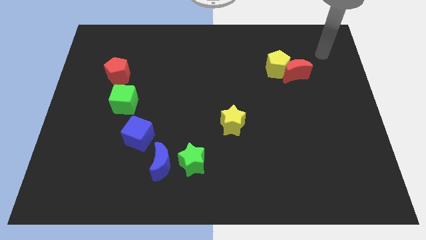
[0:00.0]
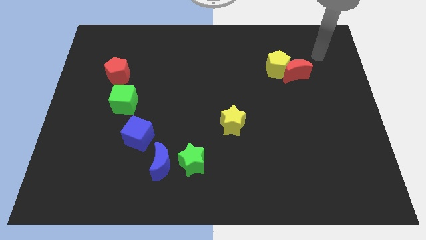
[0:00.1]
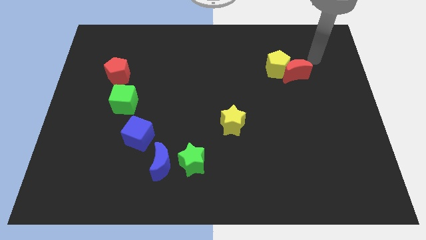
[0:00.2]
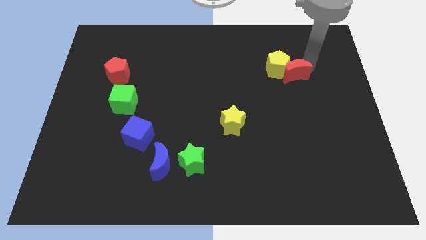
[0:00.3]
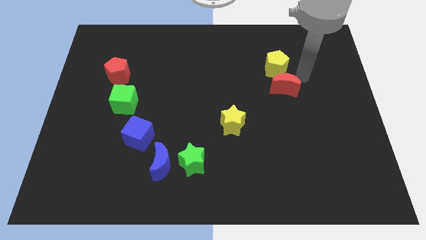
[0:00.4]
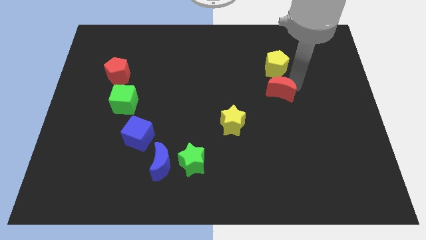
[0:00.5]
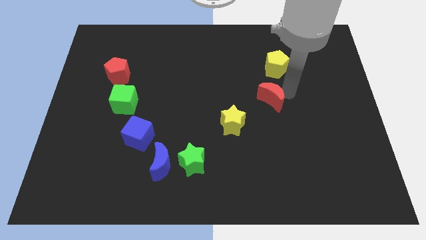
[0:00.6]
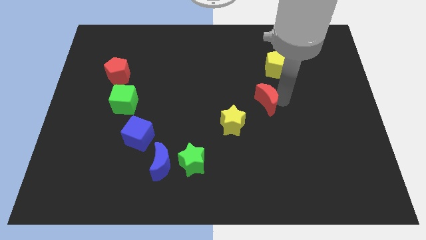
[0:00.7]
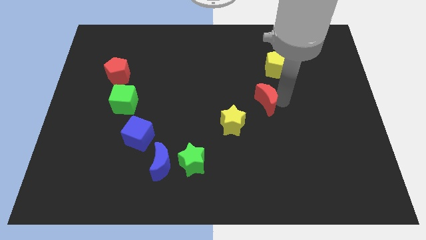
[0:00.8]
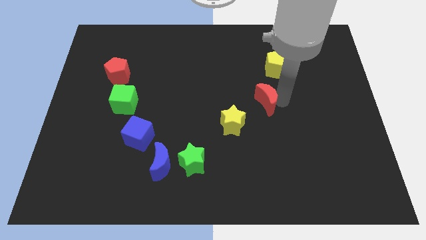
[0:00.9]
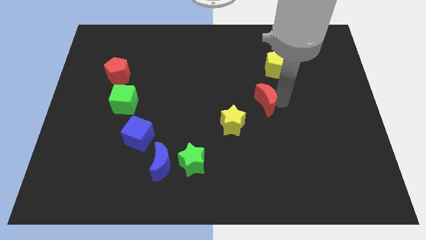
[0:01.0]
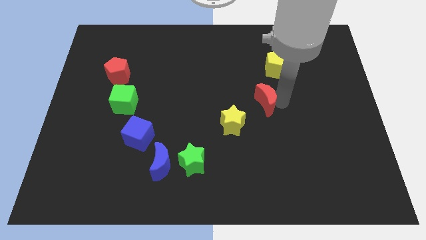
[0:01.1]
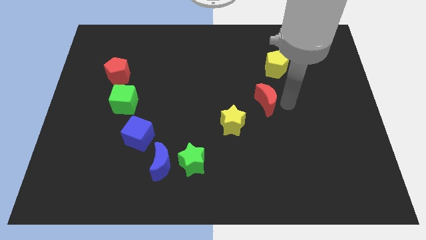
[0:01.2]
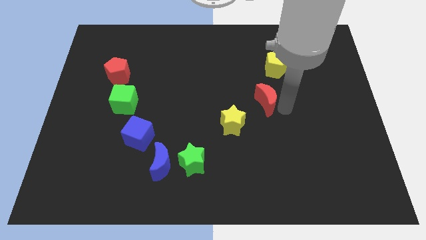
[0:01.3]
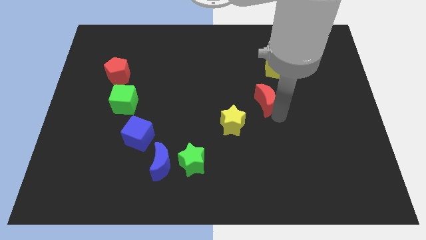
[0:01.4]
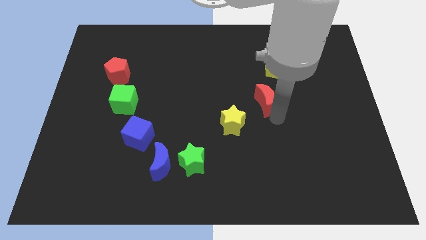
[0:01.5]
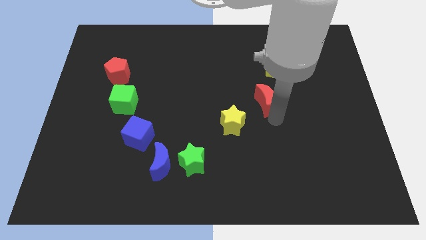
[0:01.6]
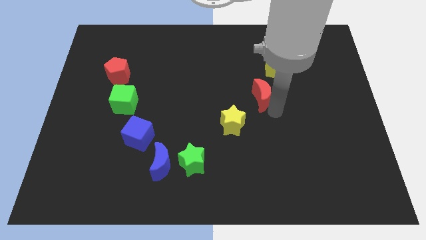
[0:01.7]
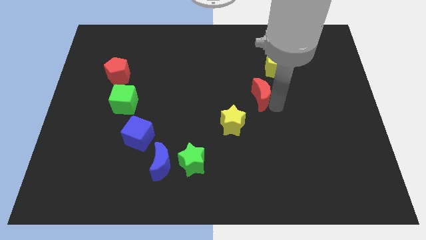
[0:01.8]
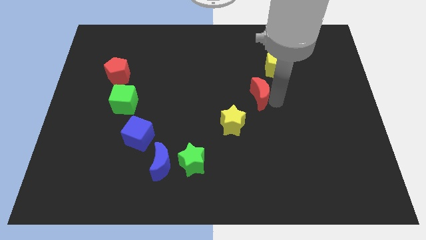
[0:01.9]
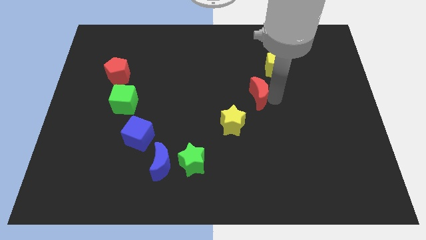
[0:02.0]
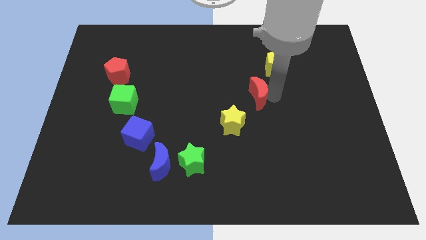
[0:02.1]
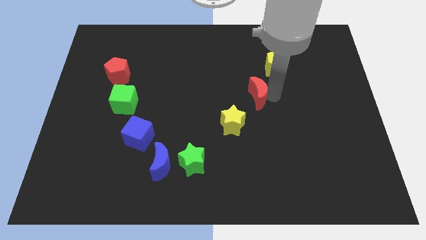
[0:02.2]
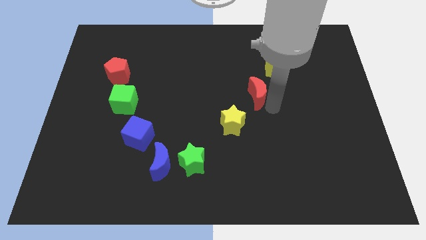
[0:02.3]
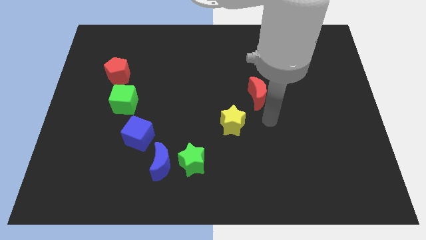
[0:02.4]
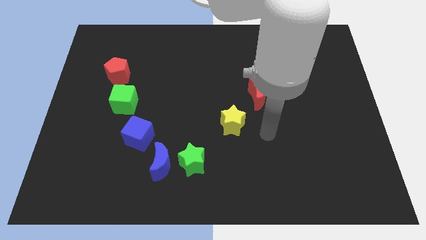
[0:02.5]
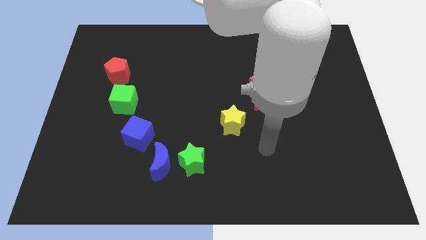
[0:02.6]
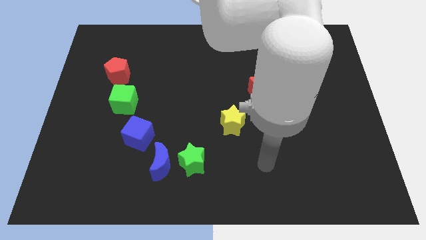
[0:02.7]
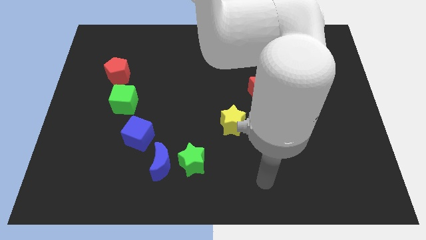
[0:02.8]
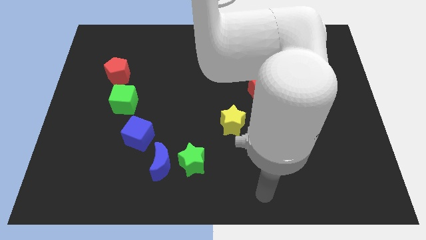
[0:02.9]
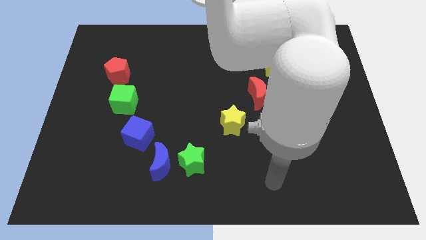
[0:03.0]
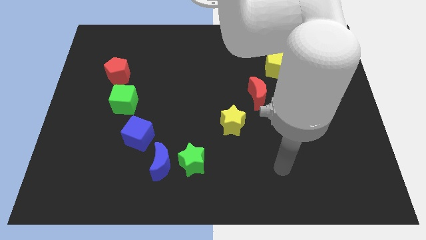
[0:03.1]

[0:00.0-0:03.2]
push the red crescent to the bottom left of the yellow pentagon

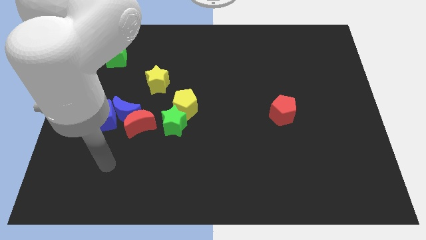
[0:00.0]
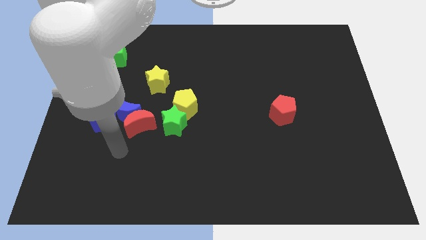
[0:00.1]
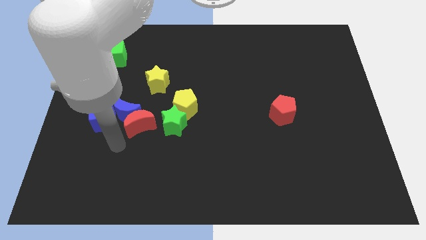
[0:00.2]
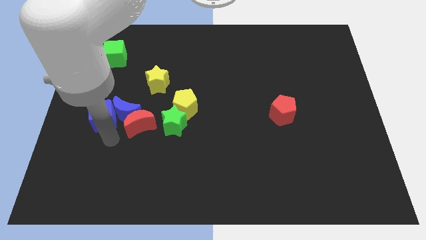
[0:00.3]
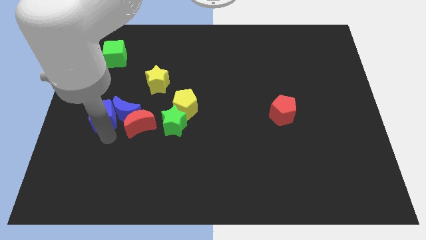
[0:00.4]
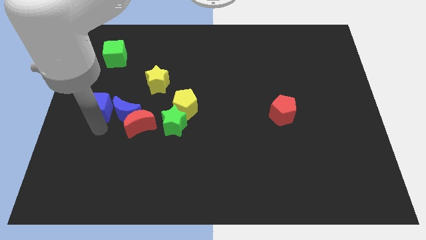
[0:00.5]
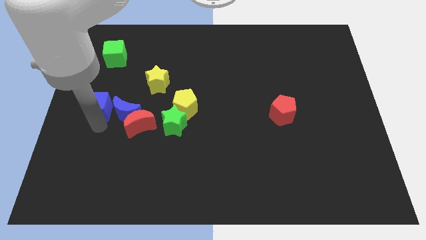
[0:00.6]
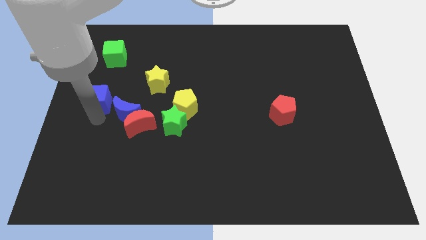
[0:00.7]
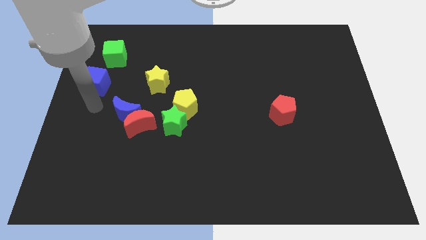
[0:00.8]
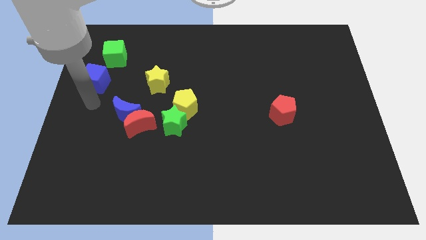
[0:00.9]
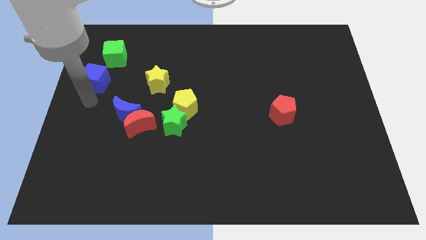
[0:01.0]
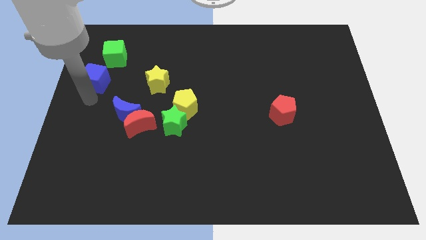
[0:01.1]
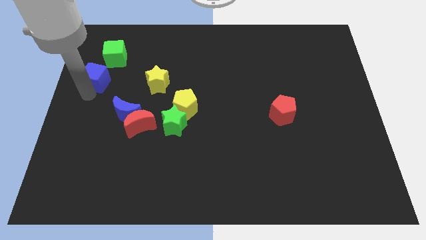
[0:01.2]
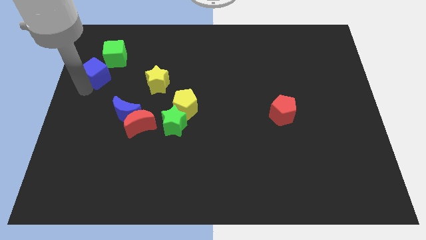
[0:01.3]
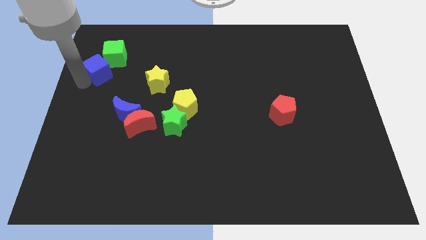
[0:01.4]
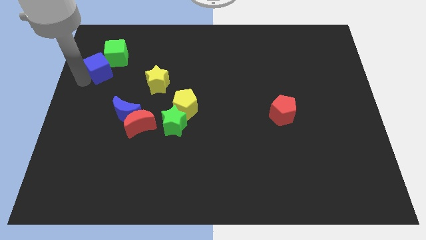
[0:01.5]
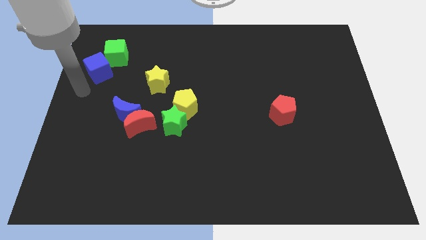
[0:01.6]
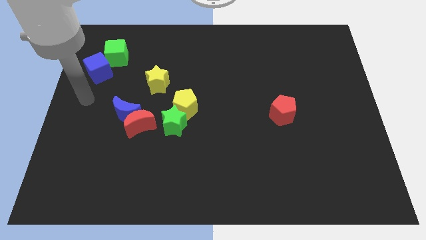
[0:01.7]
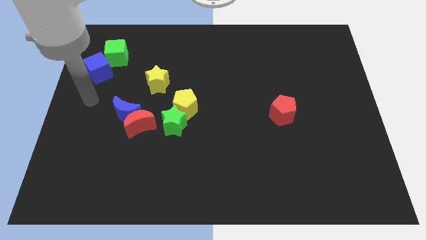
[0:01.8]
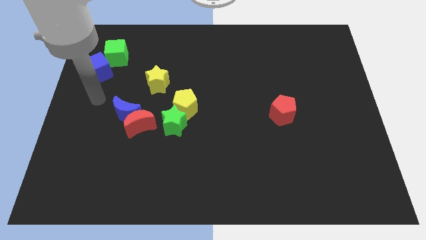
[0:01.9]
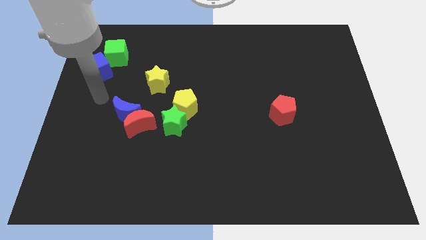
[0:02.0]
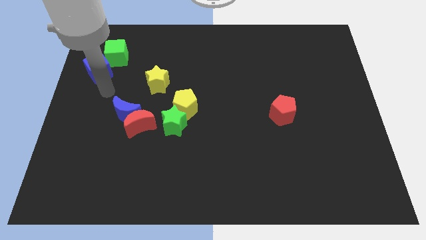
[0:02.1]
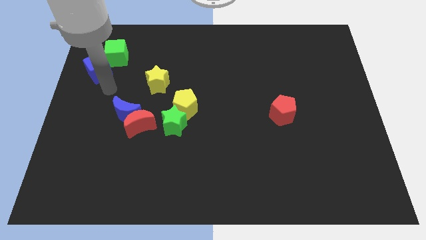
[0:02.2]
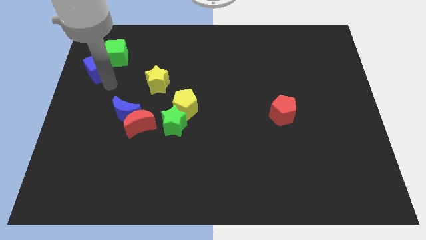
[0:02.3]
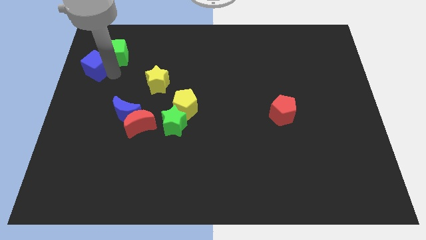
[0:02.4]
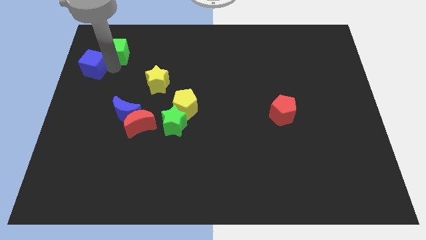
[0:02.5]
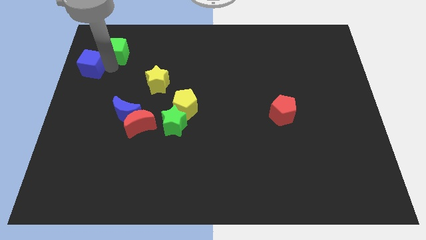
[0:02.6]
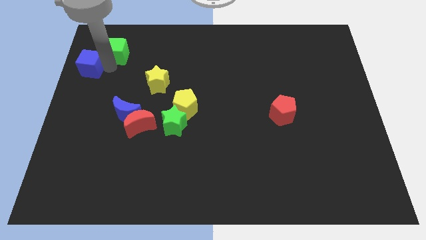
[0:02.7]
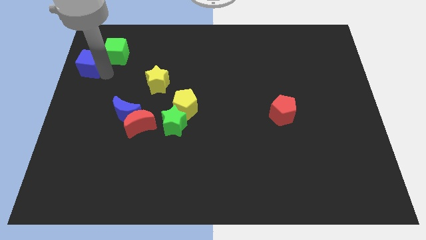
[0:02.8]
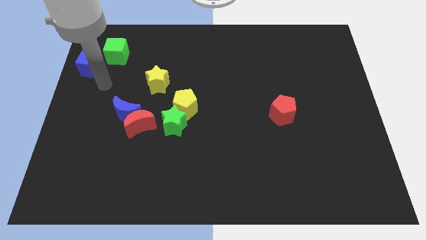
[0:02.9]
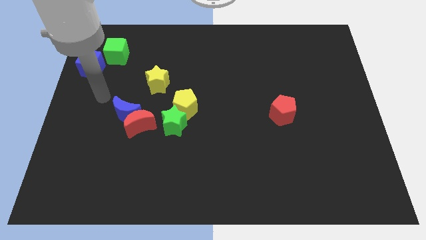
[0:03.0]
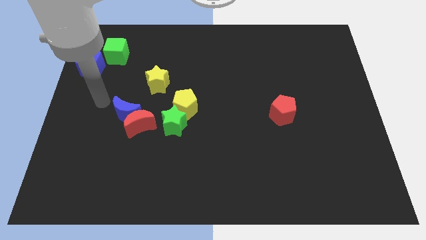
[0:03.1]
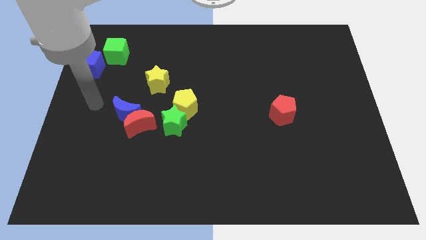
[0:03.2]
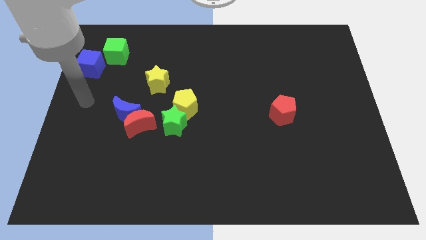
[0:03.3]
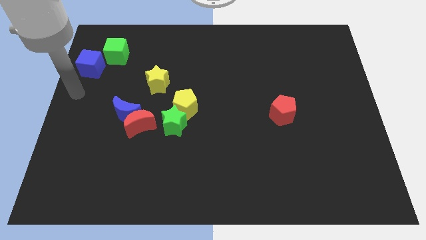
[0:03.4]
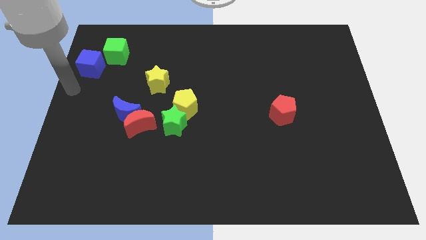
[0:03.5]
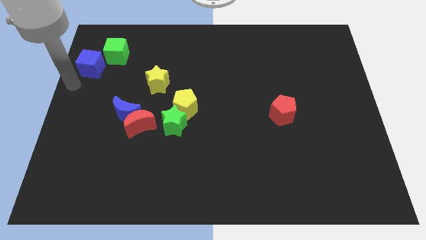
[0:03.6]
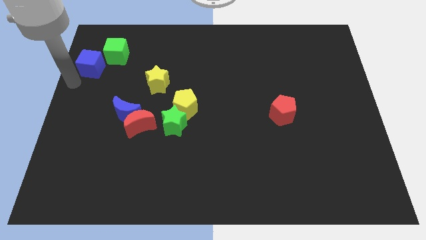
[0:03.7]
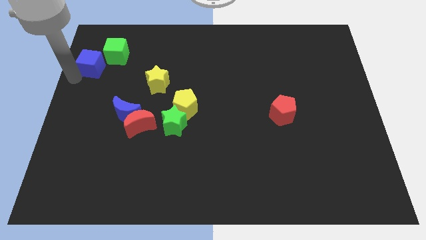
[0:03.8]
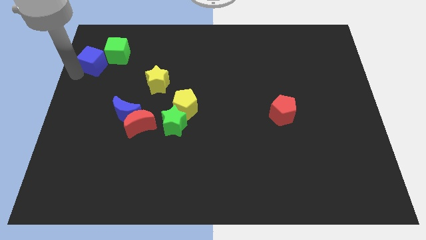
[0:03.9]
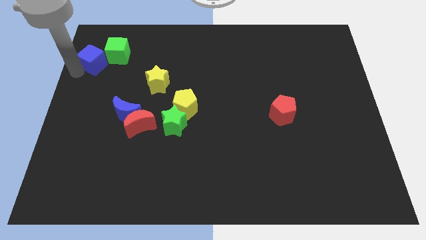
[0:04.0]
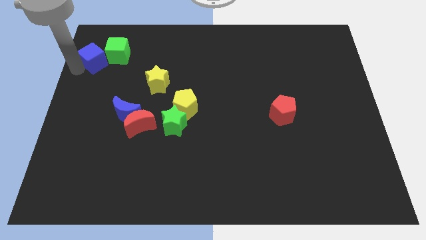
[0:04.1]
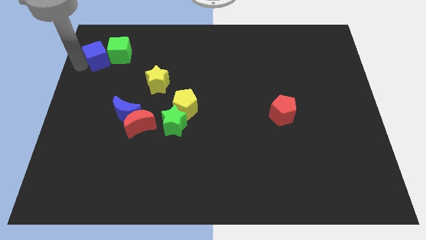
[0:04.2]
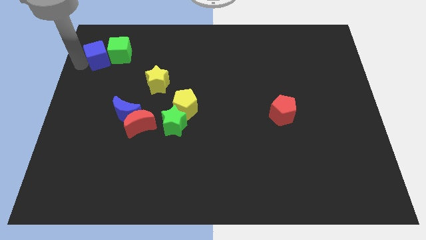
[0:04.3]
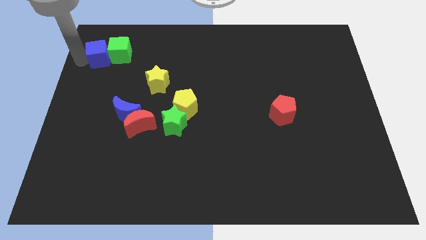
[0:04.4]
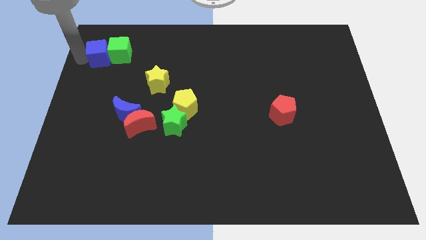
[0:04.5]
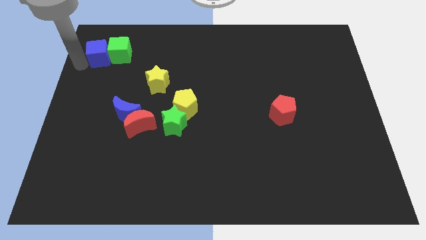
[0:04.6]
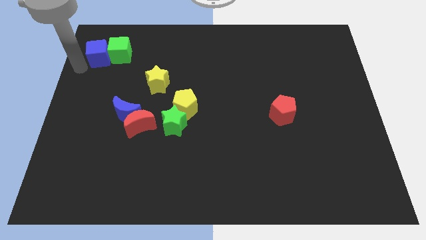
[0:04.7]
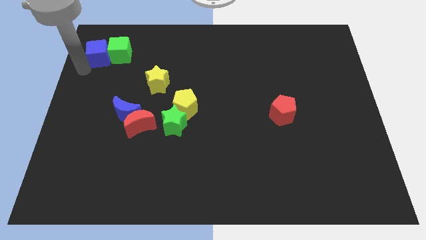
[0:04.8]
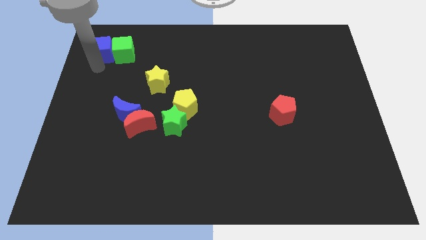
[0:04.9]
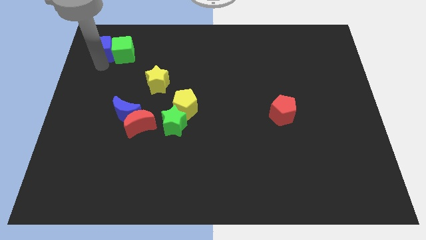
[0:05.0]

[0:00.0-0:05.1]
push the blue cube touching the left of the green cube

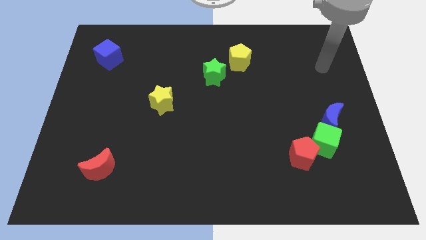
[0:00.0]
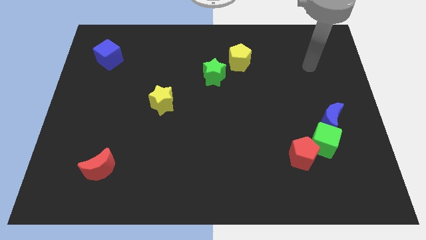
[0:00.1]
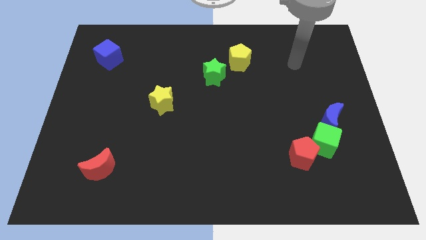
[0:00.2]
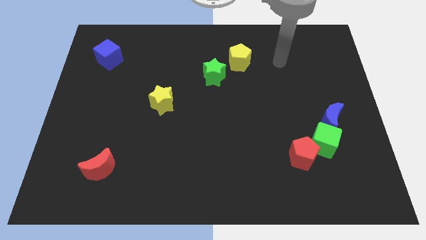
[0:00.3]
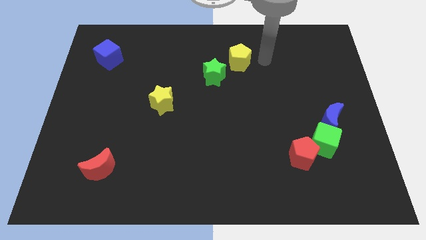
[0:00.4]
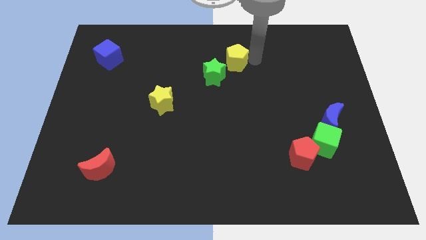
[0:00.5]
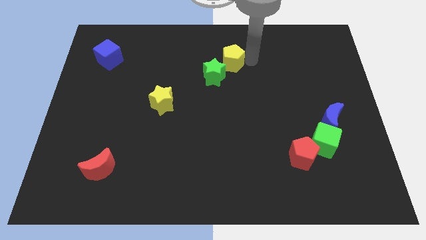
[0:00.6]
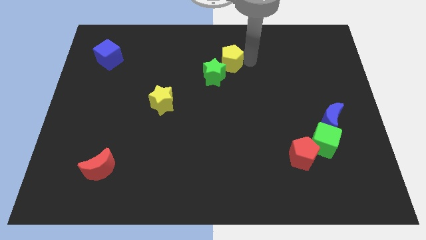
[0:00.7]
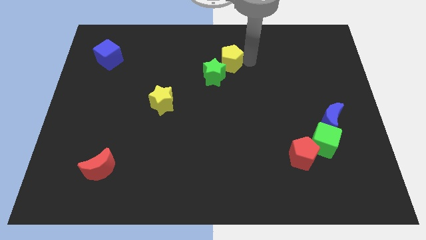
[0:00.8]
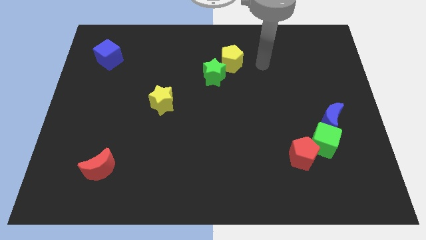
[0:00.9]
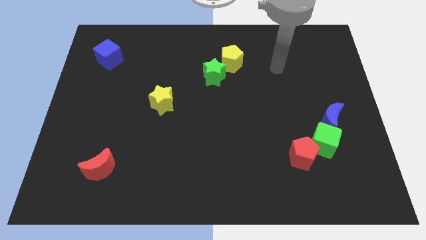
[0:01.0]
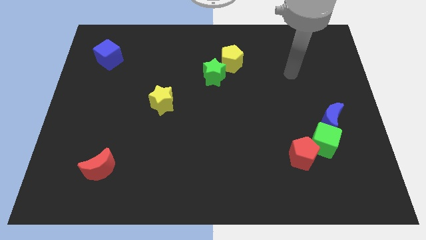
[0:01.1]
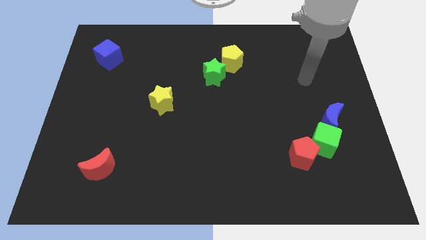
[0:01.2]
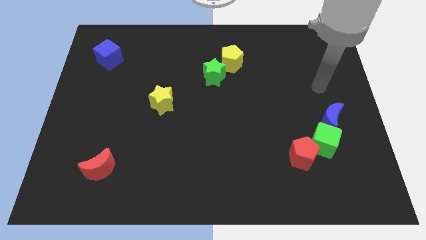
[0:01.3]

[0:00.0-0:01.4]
move the yellow pentagon closer to the green star
